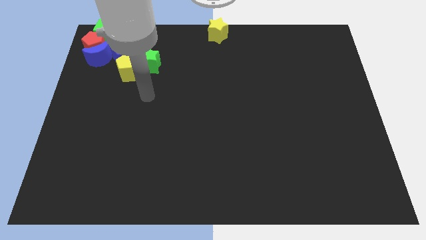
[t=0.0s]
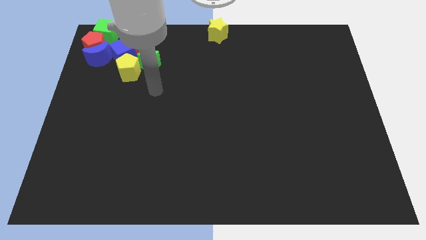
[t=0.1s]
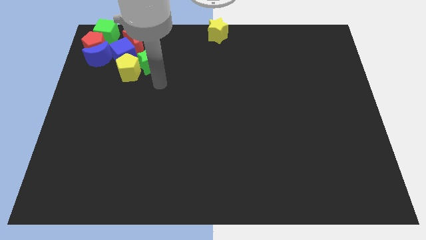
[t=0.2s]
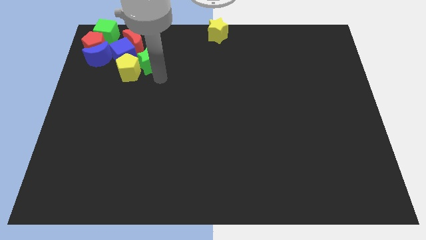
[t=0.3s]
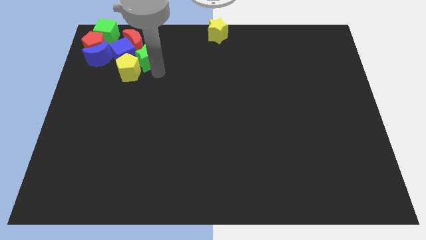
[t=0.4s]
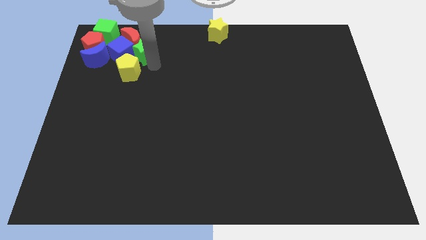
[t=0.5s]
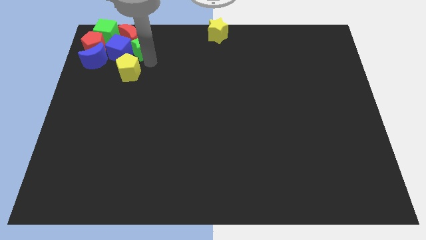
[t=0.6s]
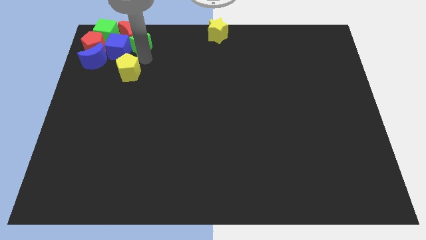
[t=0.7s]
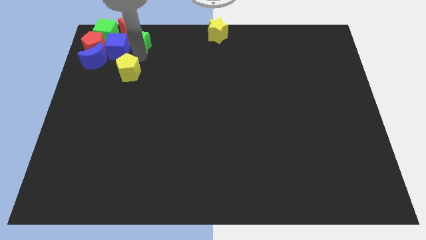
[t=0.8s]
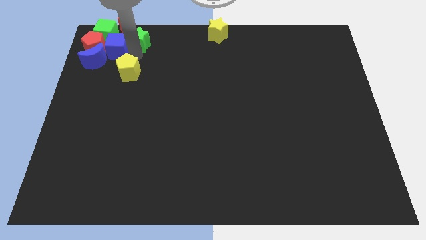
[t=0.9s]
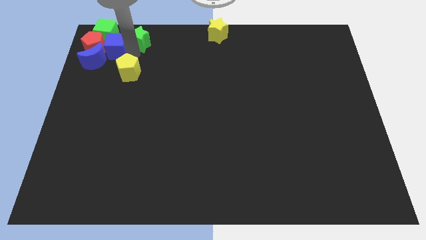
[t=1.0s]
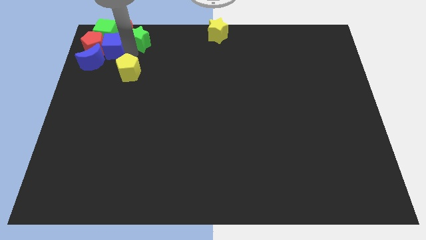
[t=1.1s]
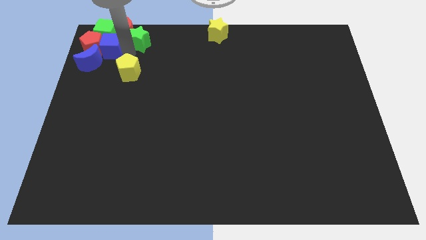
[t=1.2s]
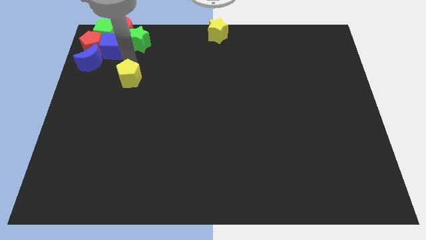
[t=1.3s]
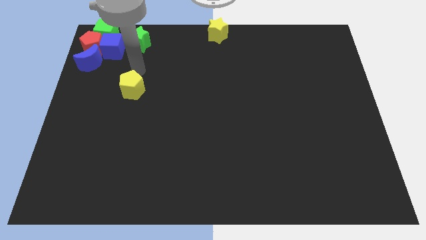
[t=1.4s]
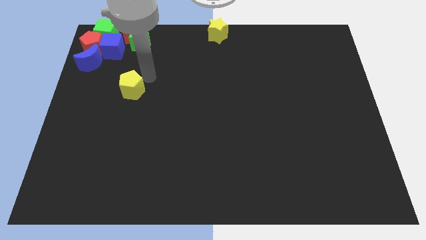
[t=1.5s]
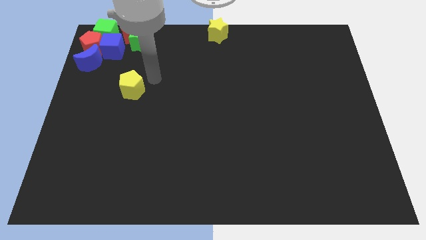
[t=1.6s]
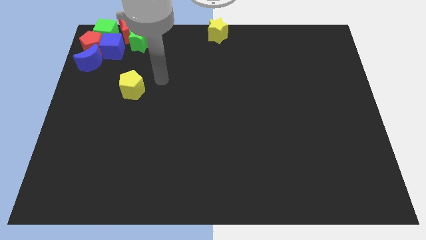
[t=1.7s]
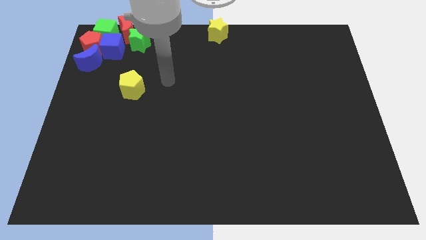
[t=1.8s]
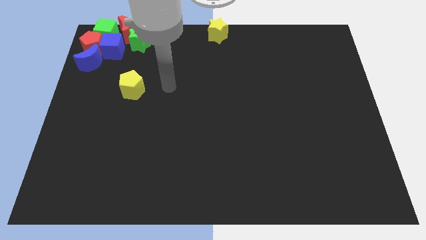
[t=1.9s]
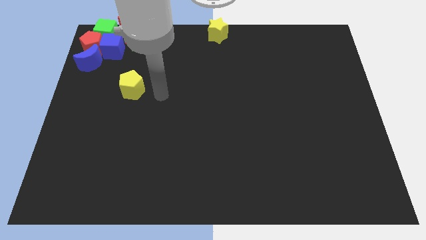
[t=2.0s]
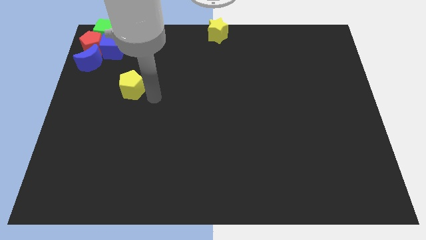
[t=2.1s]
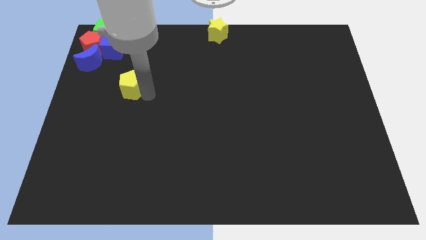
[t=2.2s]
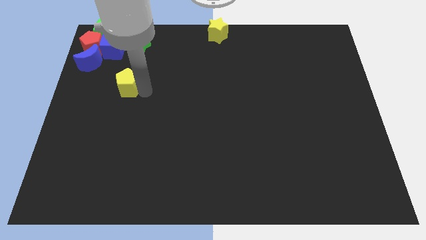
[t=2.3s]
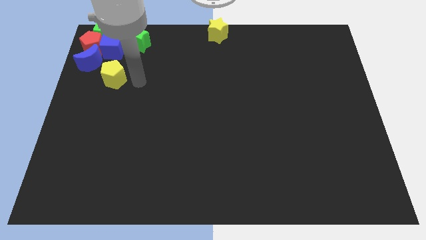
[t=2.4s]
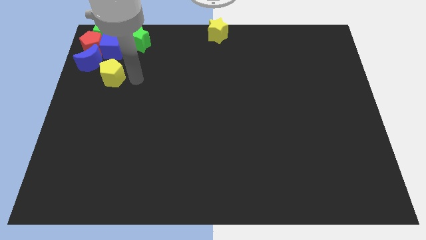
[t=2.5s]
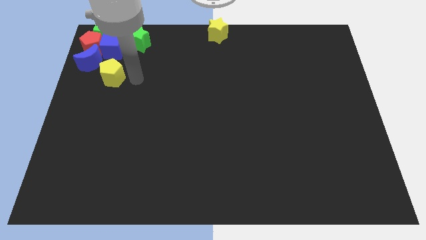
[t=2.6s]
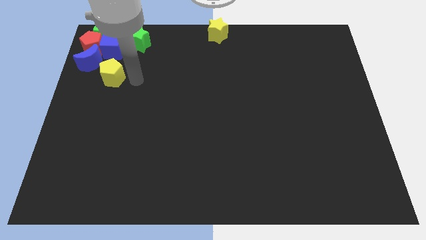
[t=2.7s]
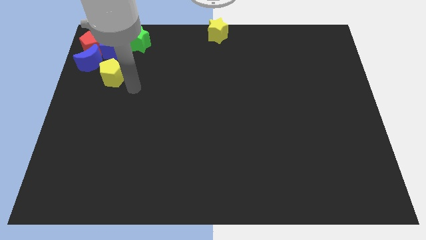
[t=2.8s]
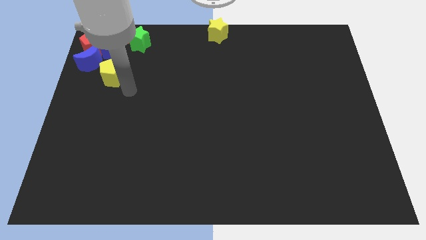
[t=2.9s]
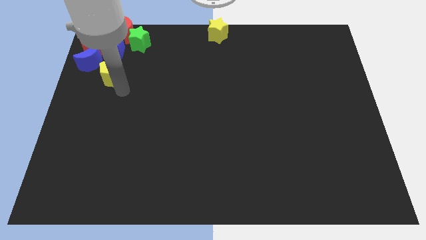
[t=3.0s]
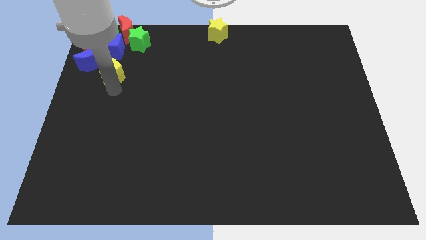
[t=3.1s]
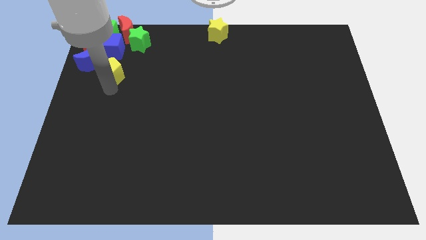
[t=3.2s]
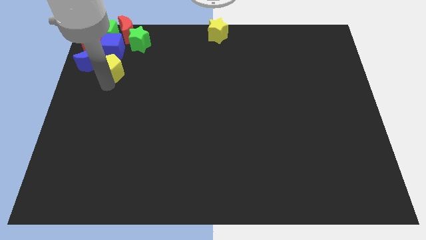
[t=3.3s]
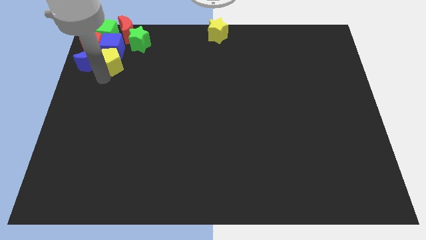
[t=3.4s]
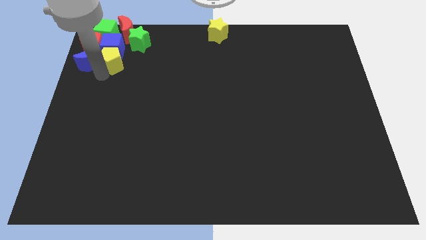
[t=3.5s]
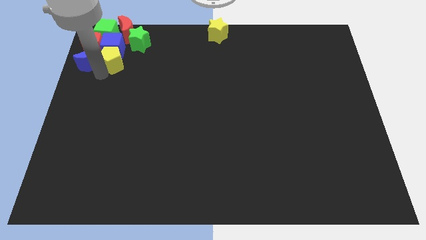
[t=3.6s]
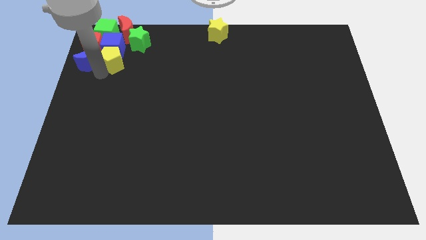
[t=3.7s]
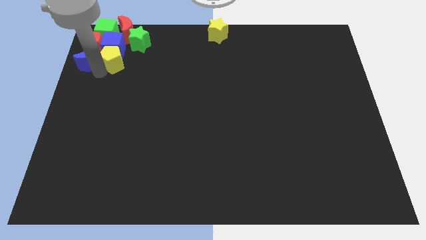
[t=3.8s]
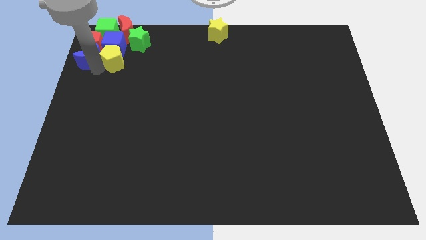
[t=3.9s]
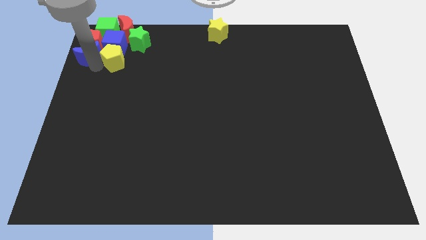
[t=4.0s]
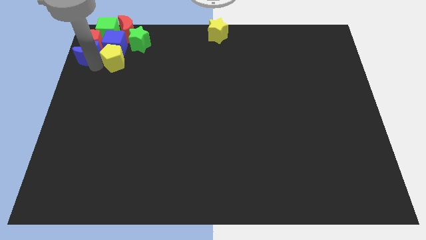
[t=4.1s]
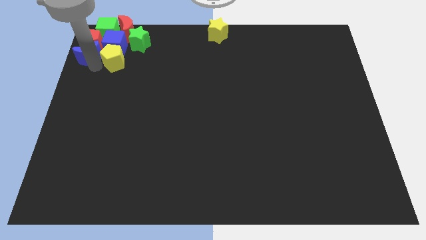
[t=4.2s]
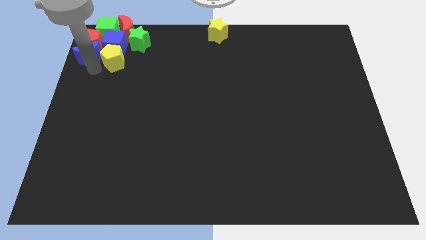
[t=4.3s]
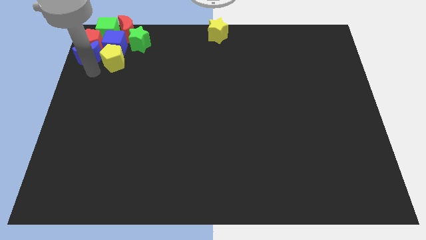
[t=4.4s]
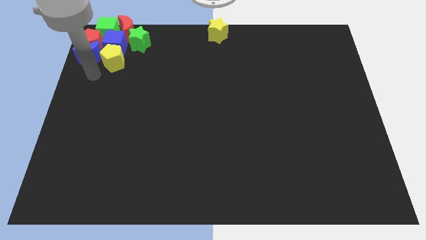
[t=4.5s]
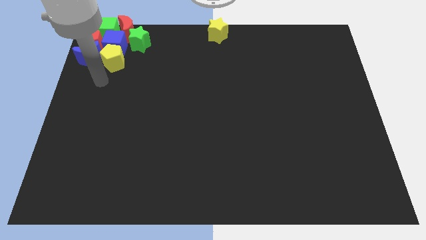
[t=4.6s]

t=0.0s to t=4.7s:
place the green star below the red moon

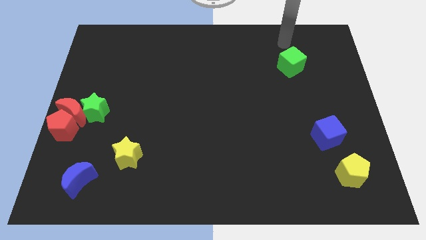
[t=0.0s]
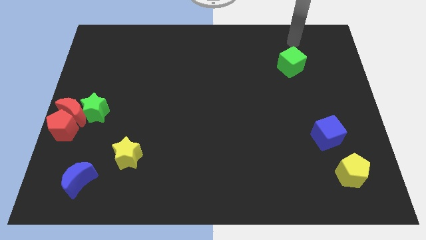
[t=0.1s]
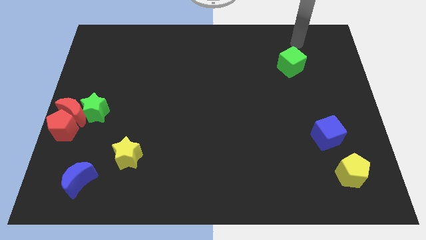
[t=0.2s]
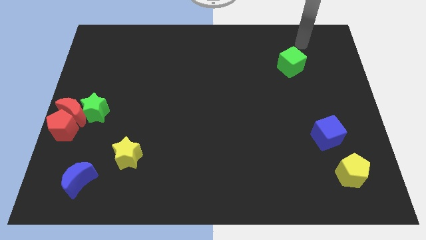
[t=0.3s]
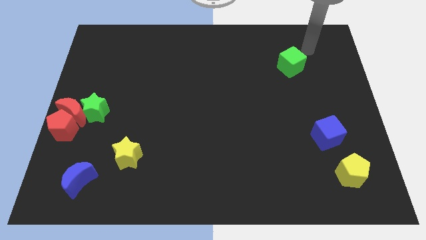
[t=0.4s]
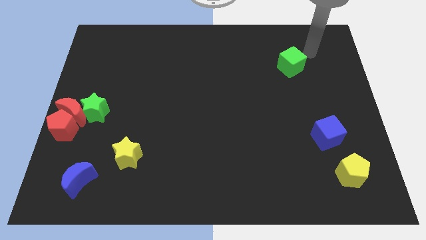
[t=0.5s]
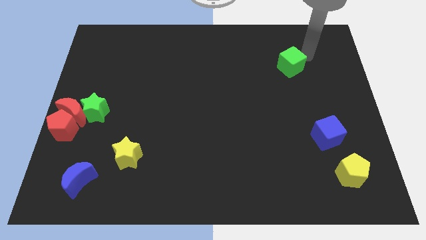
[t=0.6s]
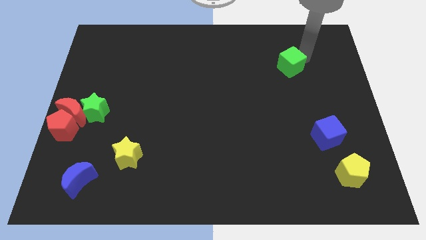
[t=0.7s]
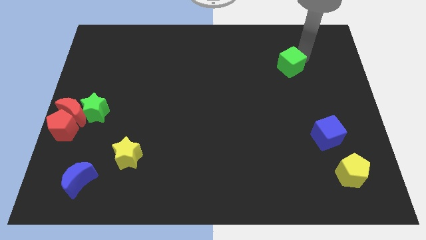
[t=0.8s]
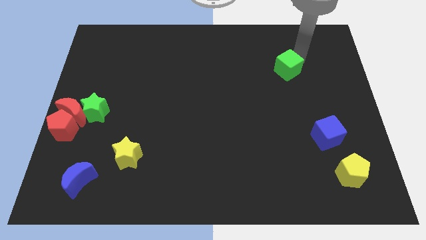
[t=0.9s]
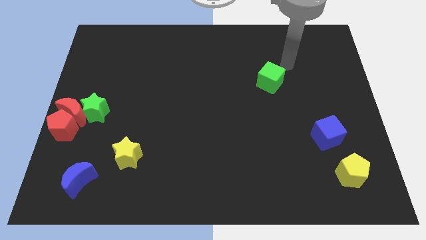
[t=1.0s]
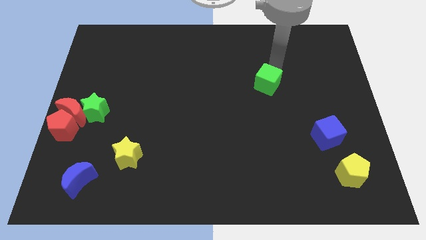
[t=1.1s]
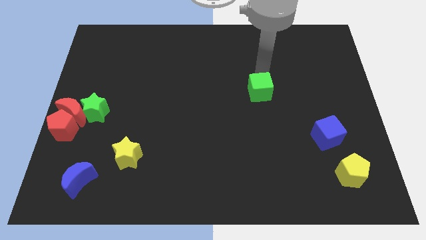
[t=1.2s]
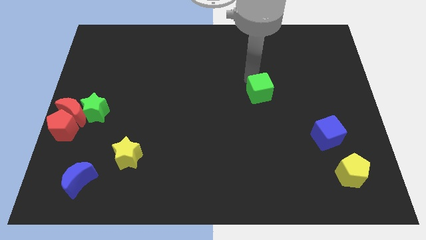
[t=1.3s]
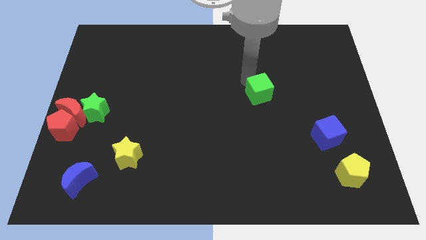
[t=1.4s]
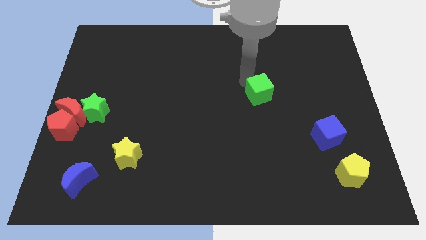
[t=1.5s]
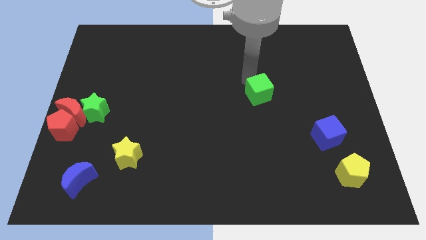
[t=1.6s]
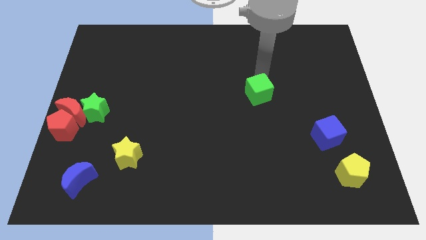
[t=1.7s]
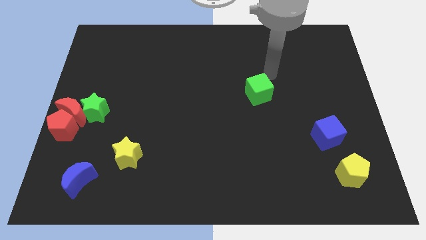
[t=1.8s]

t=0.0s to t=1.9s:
move green cube towards center of the board

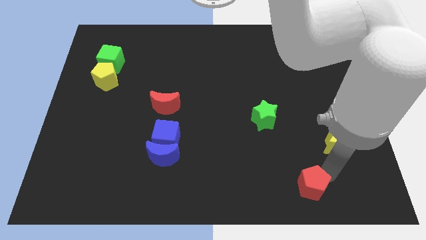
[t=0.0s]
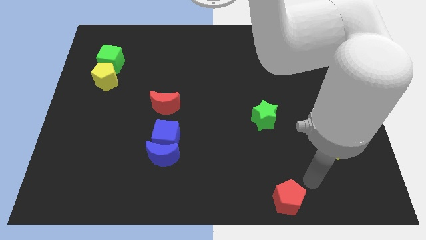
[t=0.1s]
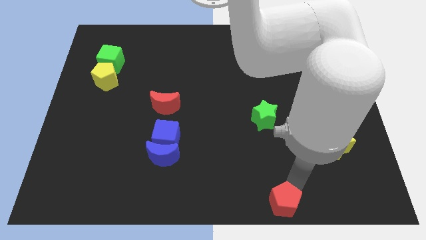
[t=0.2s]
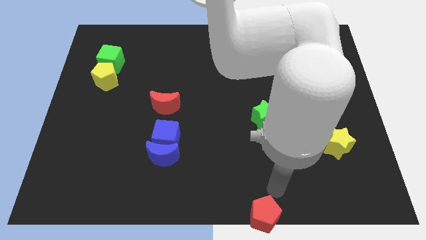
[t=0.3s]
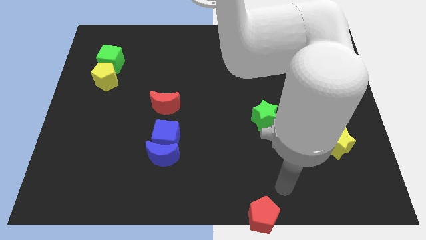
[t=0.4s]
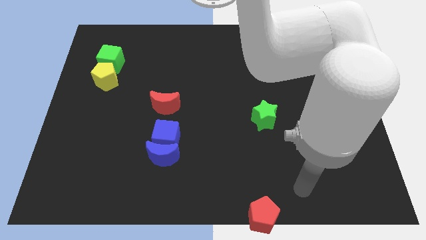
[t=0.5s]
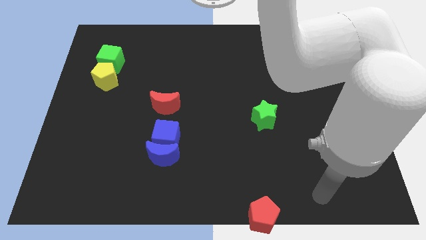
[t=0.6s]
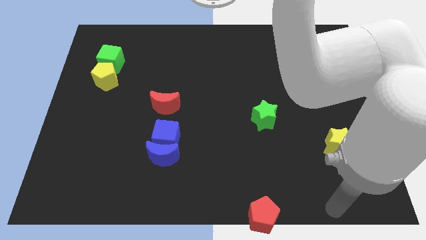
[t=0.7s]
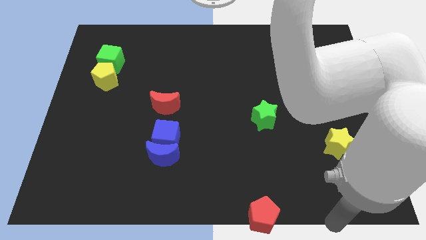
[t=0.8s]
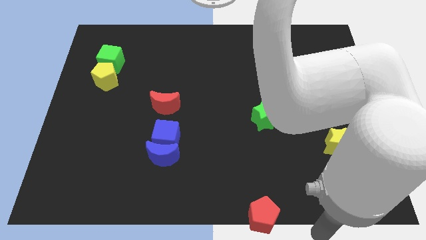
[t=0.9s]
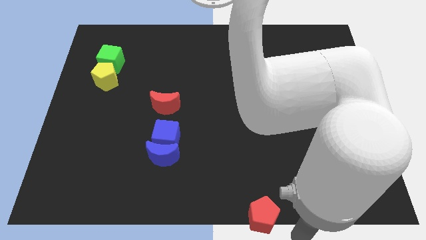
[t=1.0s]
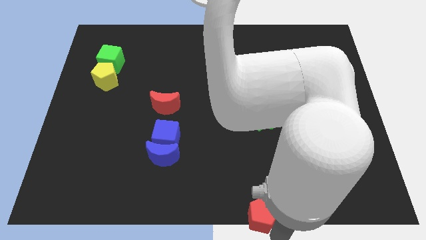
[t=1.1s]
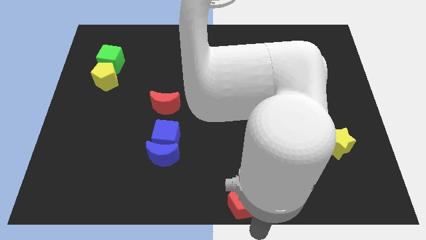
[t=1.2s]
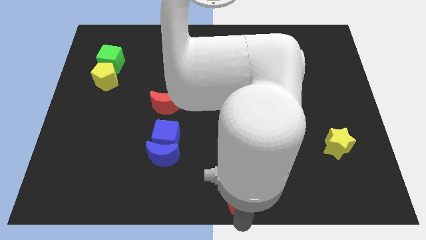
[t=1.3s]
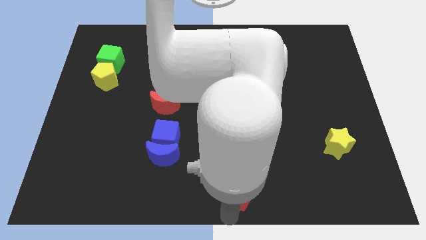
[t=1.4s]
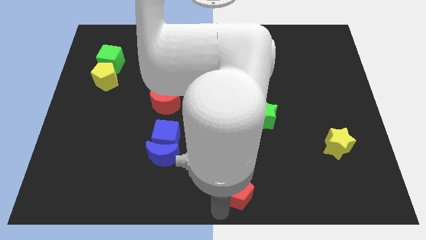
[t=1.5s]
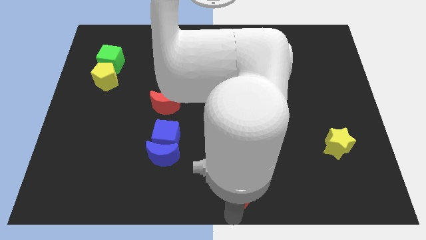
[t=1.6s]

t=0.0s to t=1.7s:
place the red pentagon at bottom center of the board

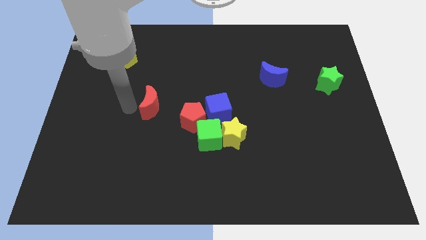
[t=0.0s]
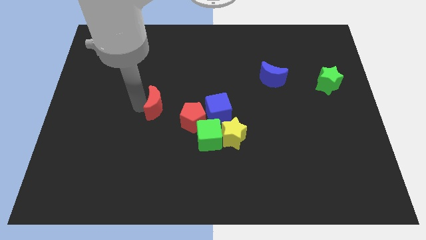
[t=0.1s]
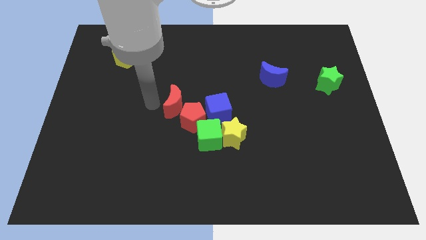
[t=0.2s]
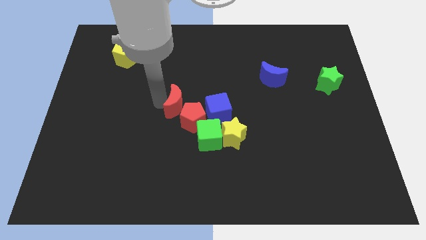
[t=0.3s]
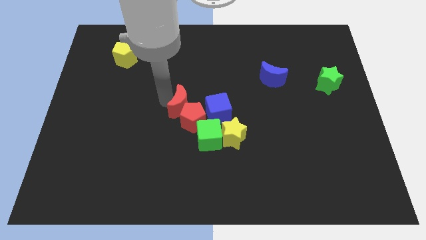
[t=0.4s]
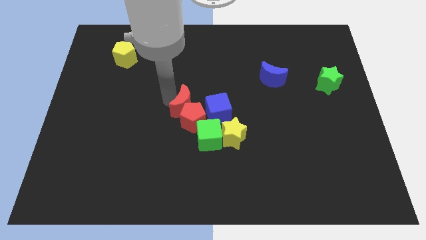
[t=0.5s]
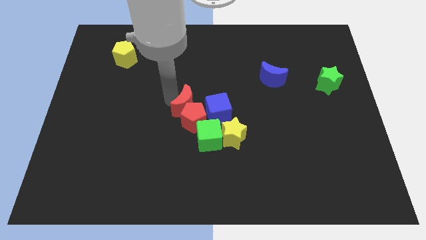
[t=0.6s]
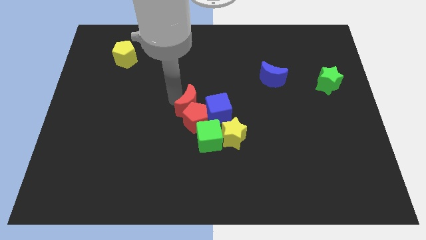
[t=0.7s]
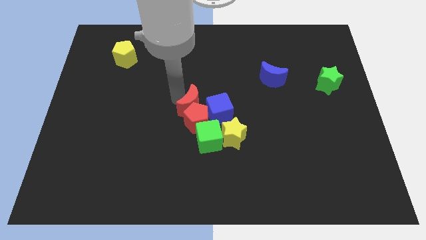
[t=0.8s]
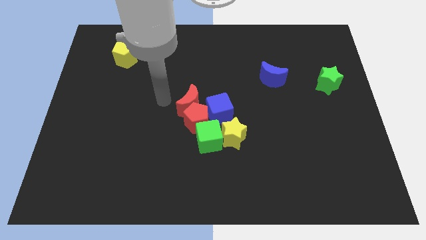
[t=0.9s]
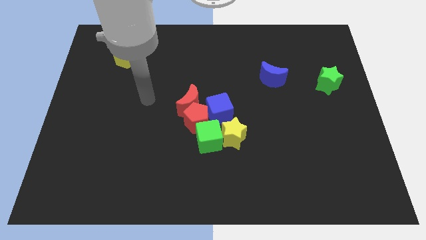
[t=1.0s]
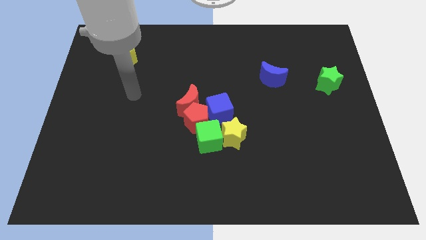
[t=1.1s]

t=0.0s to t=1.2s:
push the red crescent into the red pentagon
